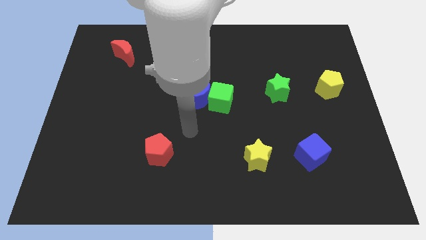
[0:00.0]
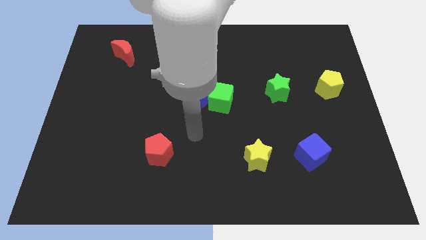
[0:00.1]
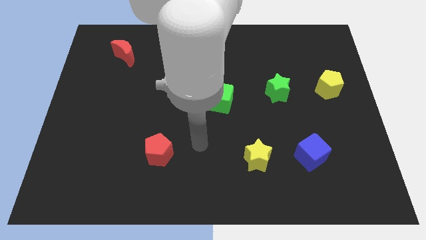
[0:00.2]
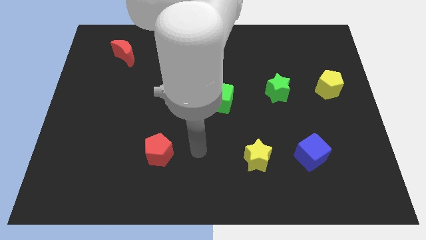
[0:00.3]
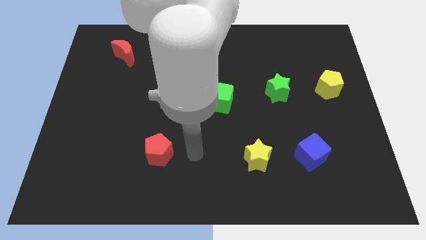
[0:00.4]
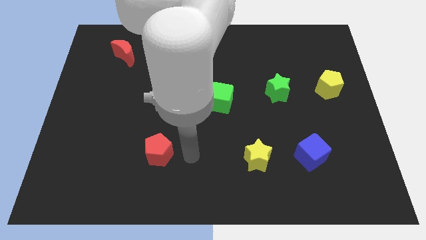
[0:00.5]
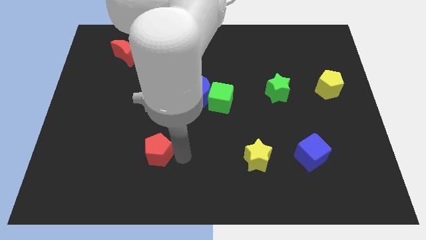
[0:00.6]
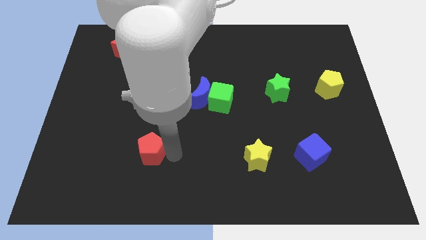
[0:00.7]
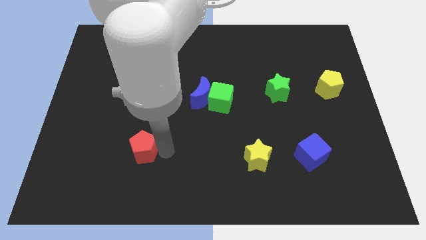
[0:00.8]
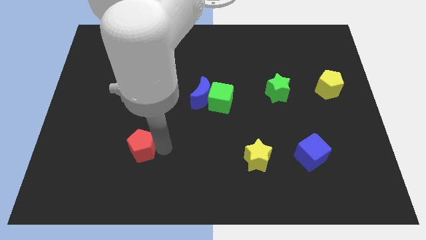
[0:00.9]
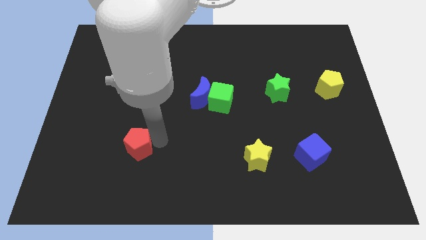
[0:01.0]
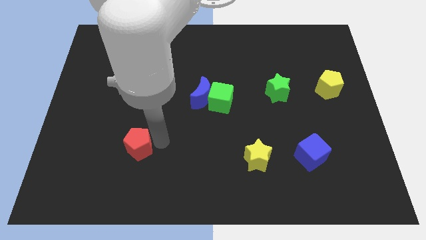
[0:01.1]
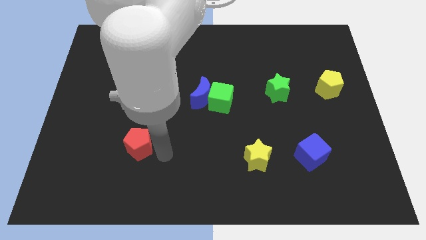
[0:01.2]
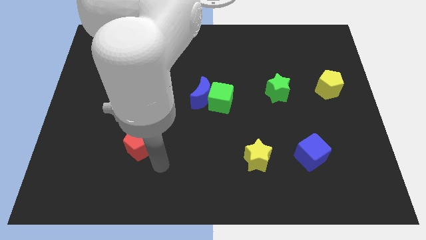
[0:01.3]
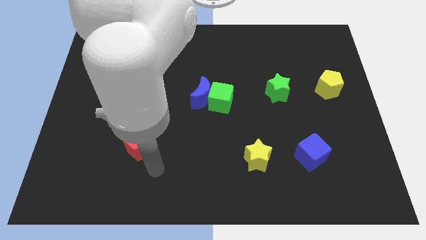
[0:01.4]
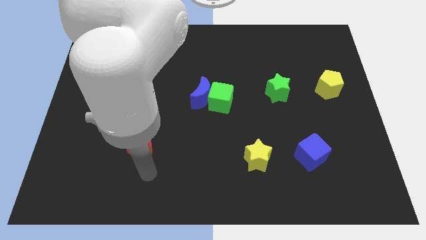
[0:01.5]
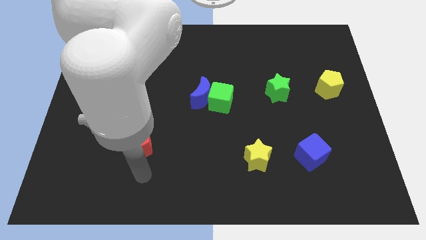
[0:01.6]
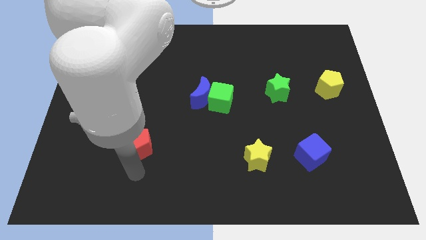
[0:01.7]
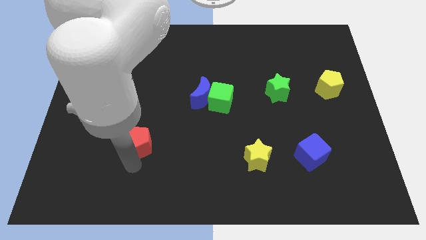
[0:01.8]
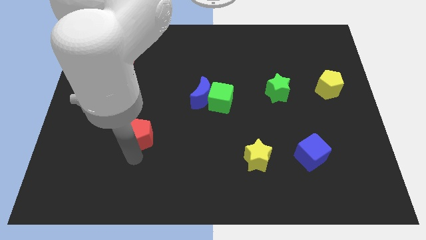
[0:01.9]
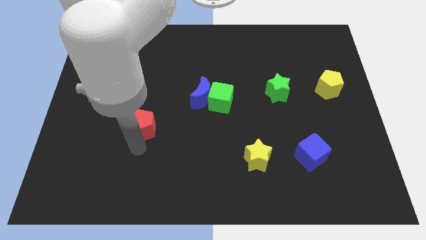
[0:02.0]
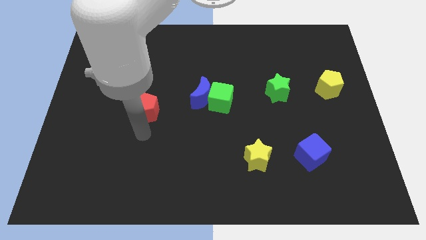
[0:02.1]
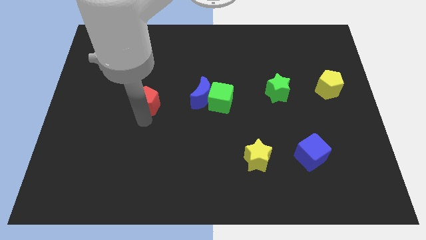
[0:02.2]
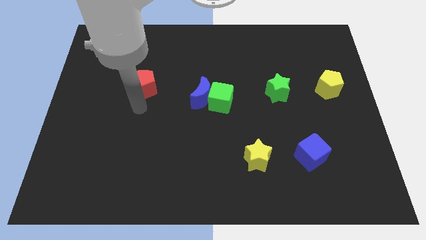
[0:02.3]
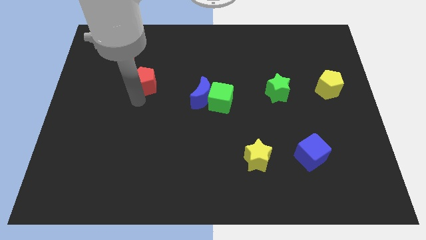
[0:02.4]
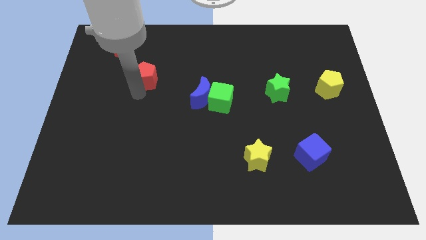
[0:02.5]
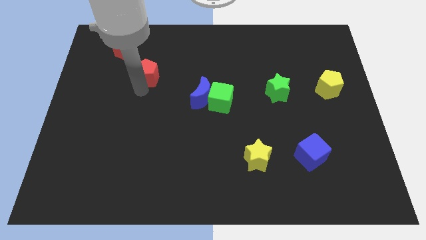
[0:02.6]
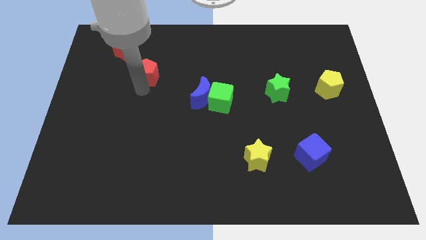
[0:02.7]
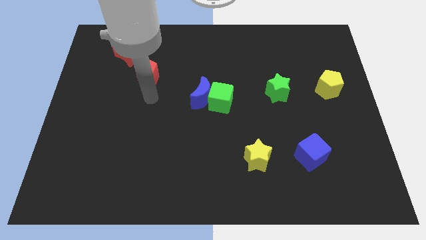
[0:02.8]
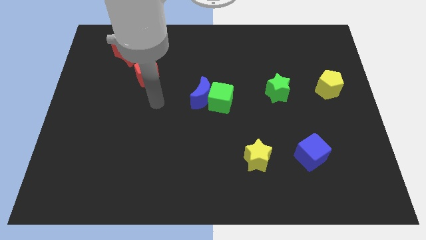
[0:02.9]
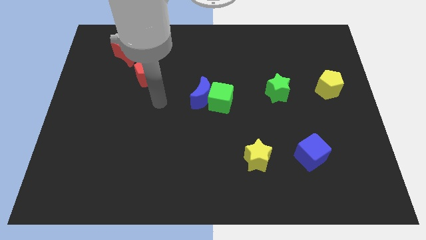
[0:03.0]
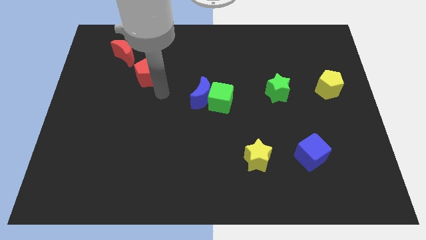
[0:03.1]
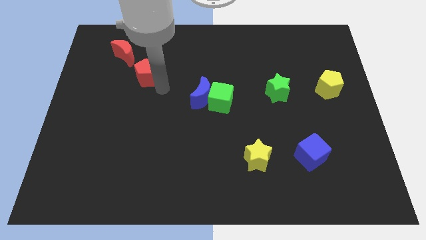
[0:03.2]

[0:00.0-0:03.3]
push the red pentagon towards the top

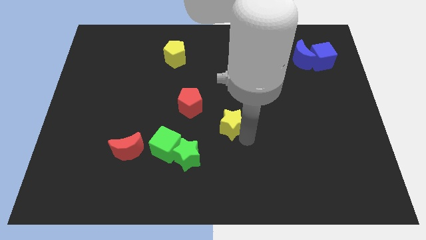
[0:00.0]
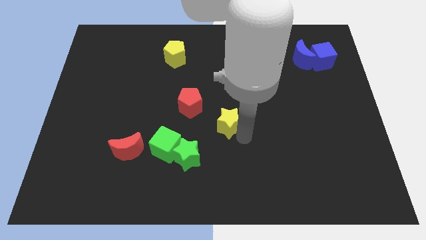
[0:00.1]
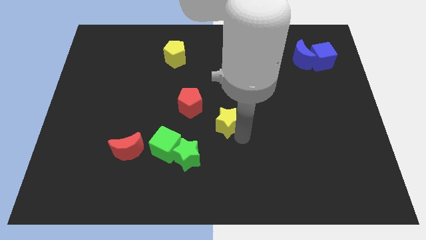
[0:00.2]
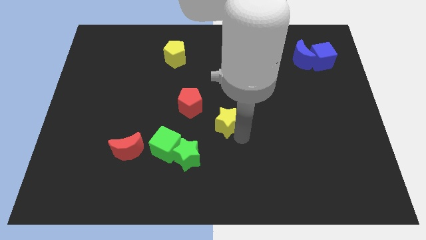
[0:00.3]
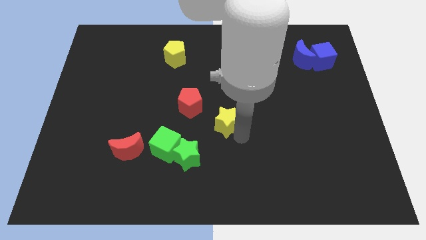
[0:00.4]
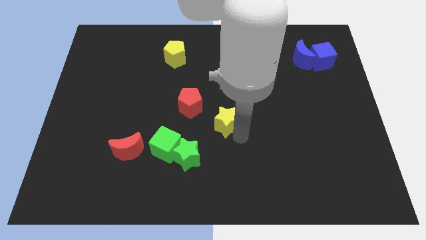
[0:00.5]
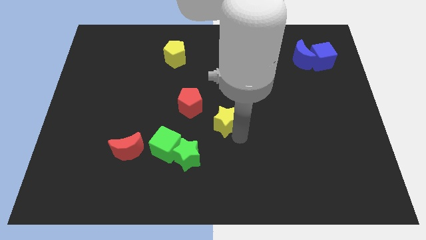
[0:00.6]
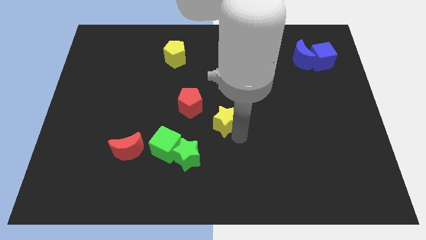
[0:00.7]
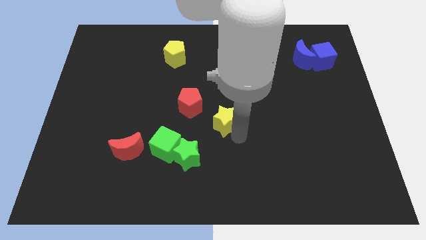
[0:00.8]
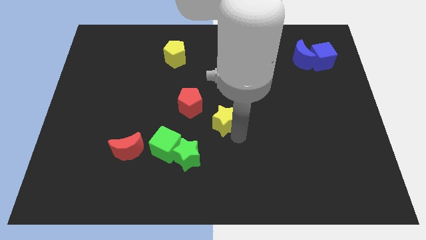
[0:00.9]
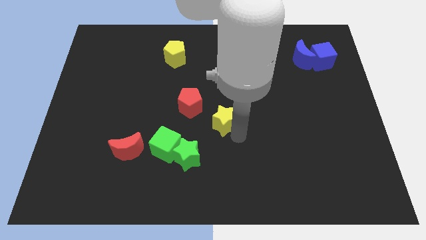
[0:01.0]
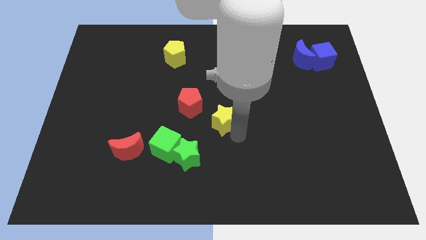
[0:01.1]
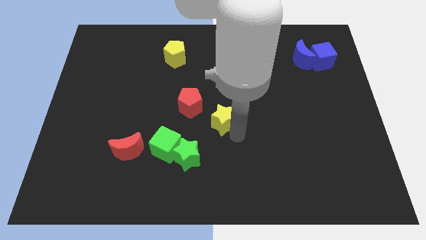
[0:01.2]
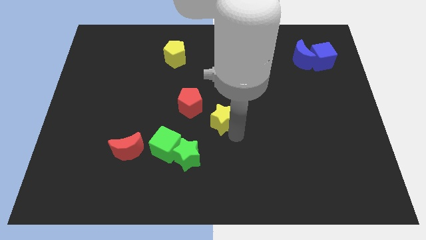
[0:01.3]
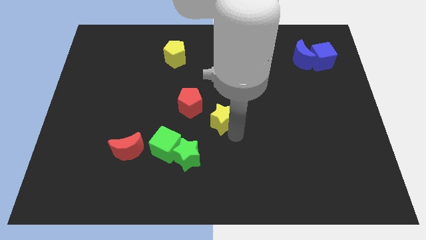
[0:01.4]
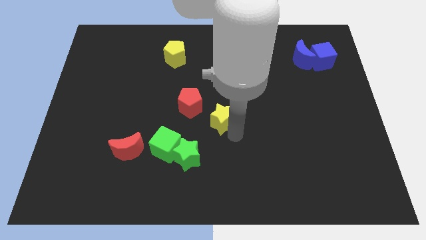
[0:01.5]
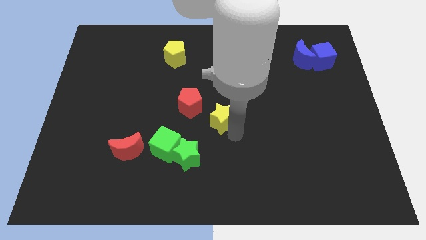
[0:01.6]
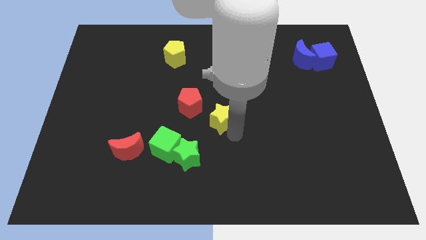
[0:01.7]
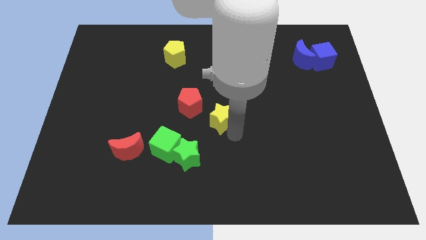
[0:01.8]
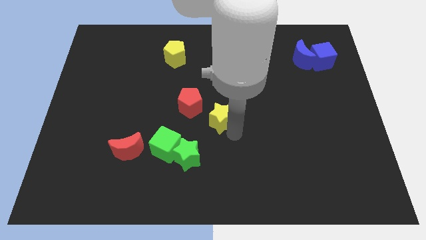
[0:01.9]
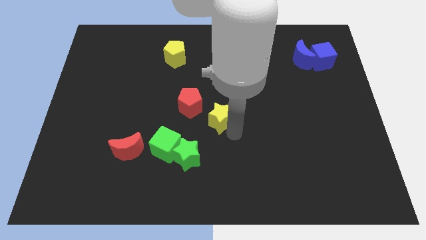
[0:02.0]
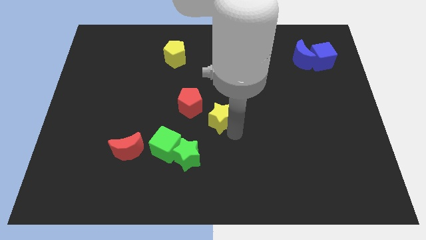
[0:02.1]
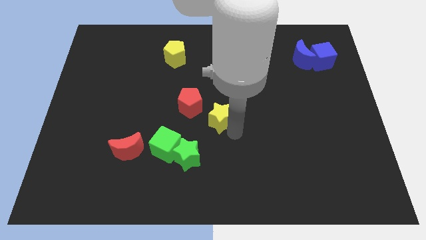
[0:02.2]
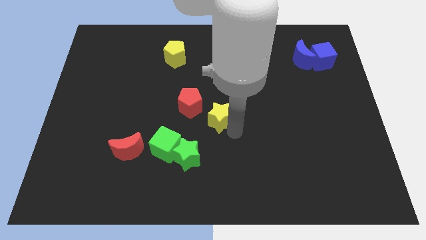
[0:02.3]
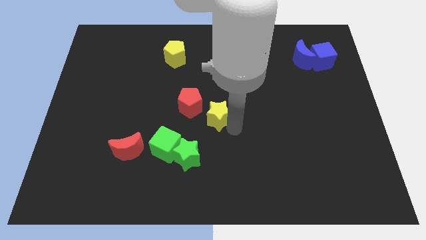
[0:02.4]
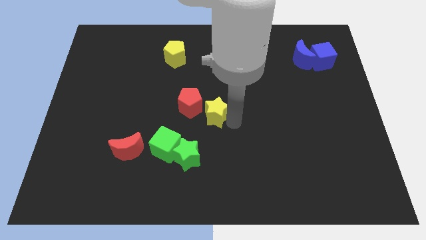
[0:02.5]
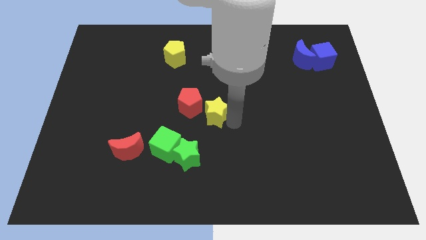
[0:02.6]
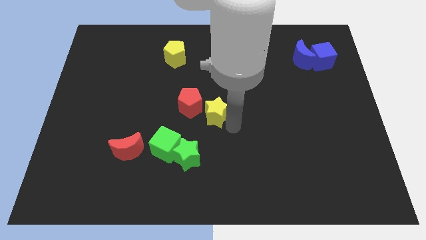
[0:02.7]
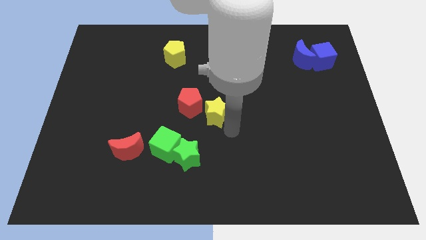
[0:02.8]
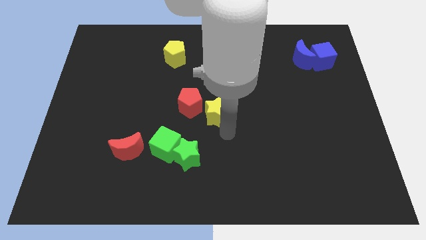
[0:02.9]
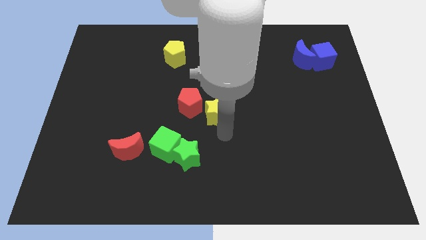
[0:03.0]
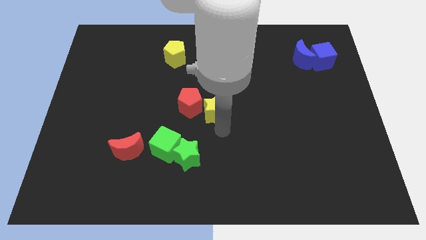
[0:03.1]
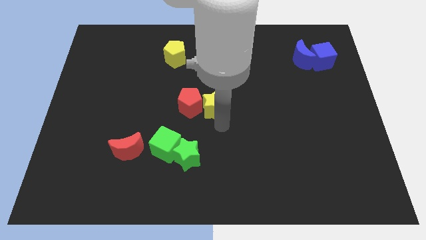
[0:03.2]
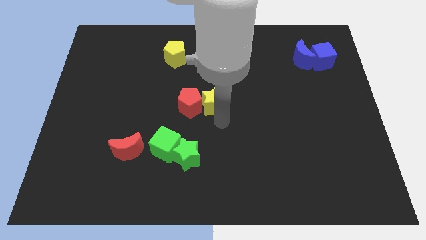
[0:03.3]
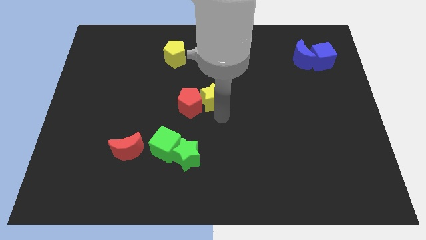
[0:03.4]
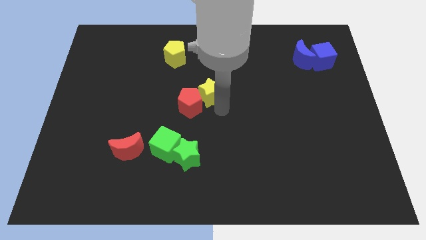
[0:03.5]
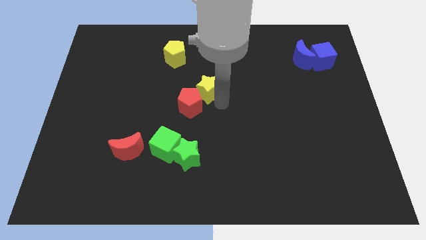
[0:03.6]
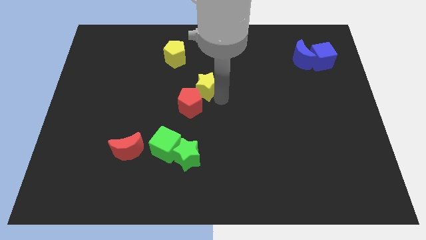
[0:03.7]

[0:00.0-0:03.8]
put the yellow star to the right of the red pentagon

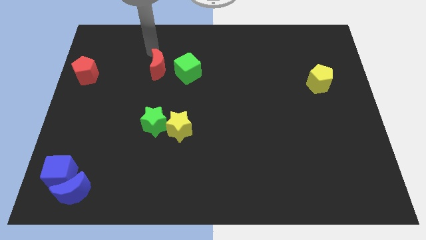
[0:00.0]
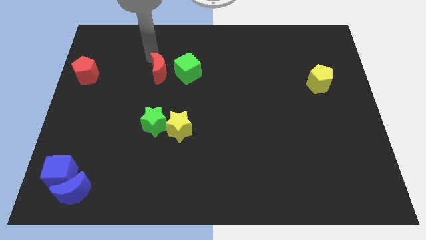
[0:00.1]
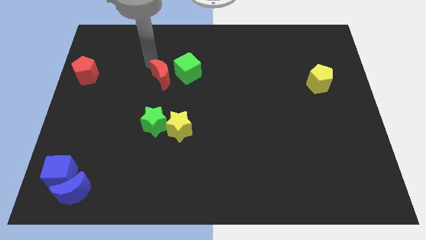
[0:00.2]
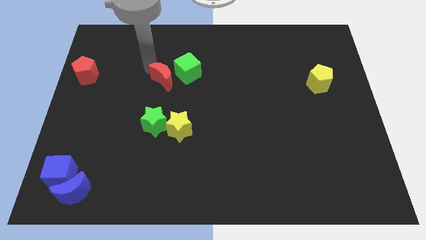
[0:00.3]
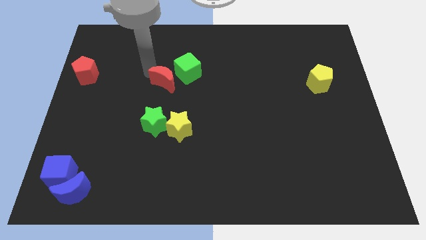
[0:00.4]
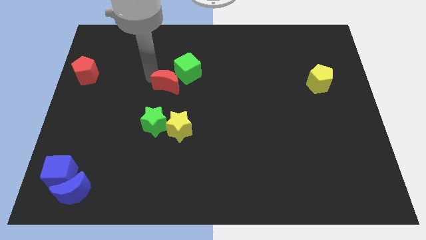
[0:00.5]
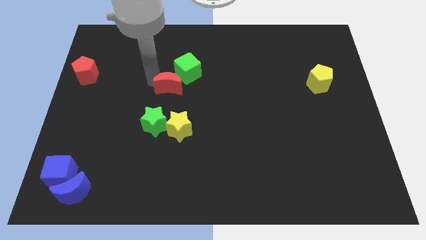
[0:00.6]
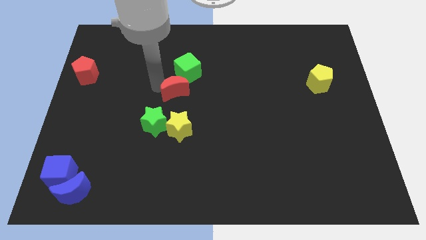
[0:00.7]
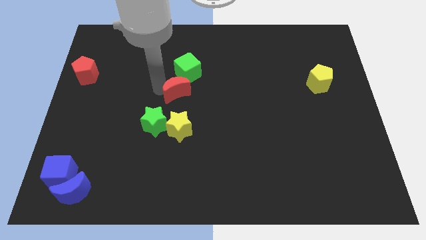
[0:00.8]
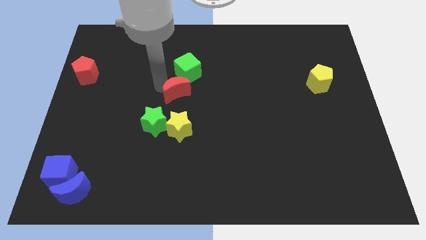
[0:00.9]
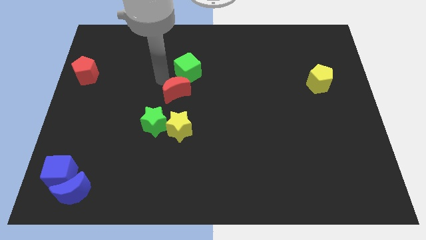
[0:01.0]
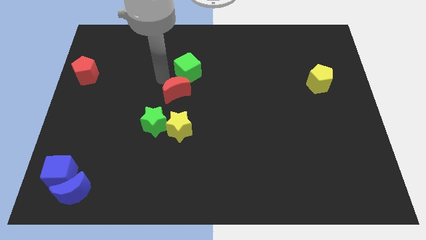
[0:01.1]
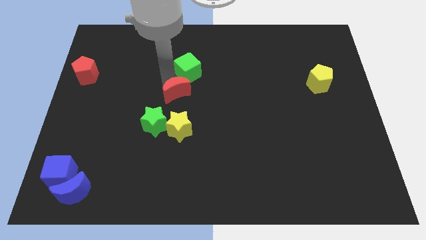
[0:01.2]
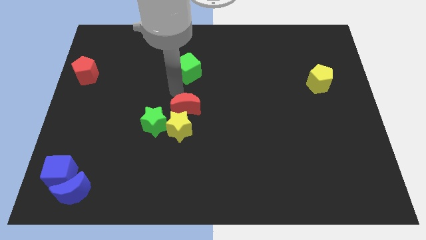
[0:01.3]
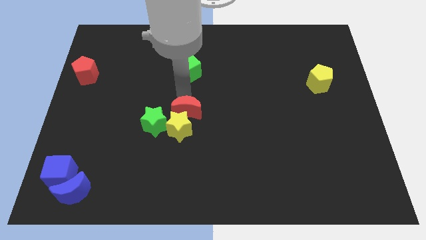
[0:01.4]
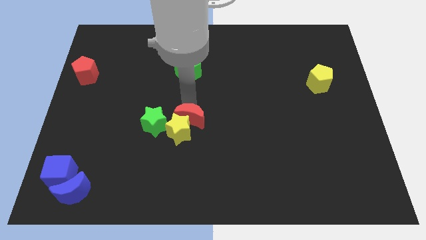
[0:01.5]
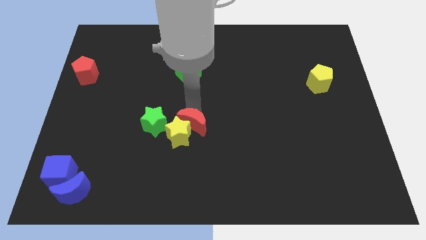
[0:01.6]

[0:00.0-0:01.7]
slide red moon to the top right of the yellow star

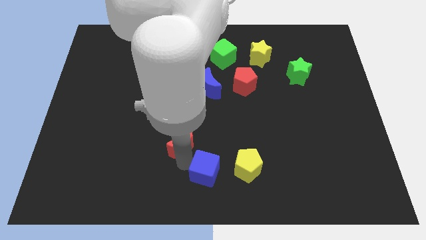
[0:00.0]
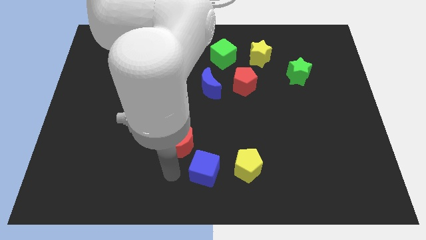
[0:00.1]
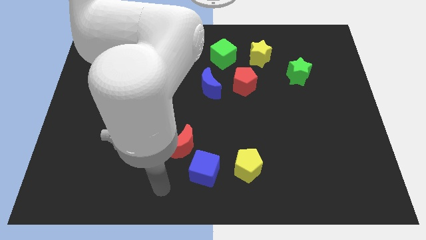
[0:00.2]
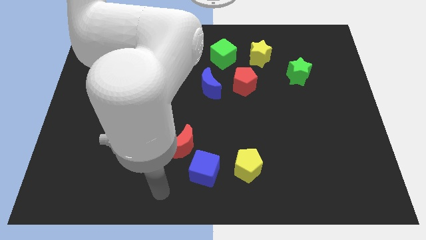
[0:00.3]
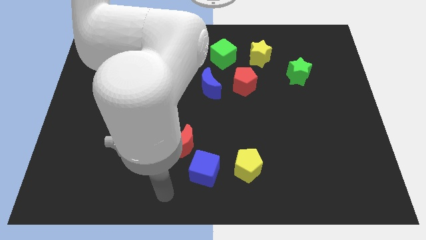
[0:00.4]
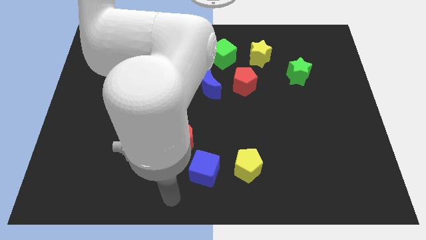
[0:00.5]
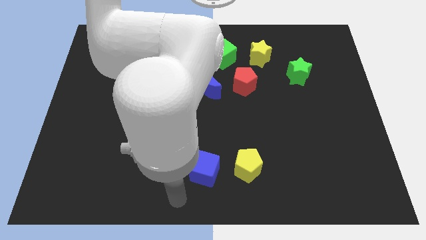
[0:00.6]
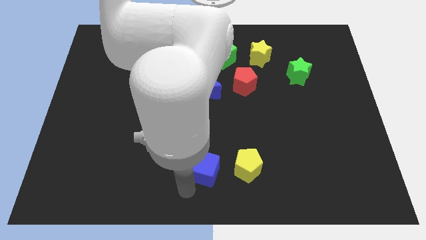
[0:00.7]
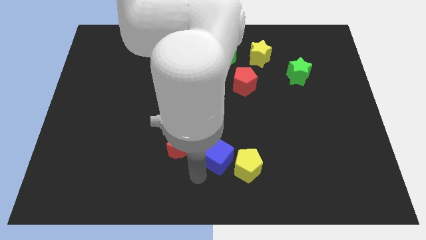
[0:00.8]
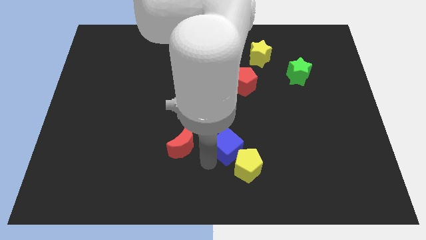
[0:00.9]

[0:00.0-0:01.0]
place the blue cube between the yellow pentagon and red moon
